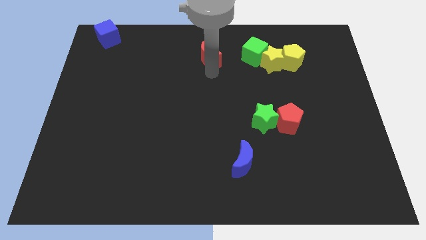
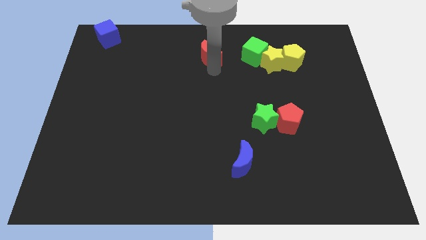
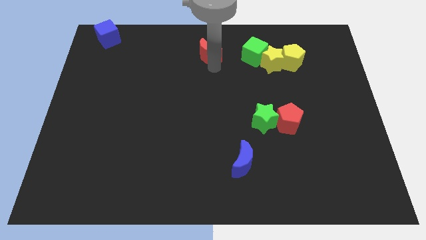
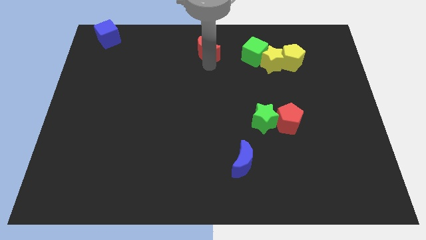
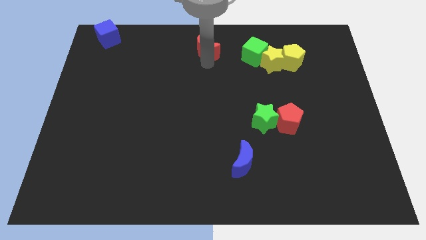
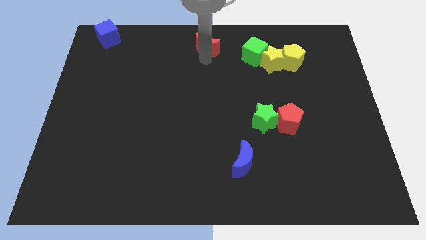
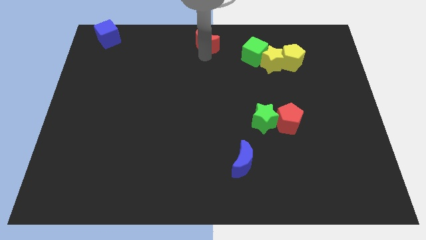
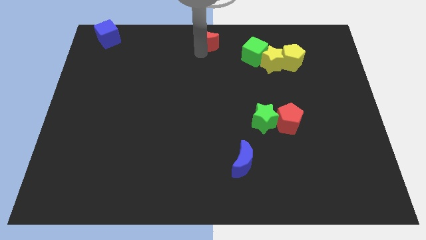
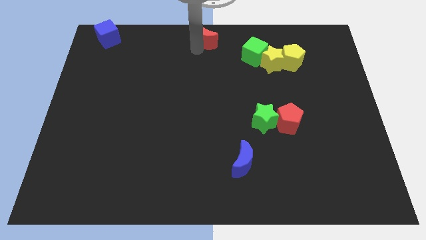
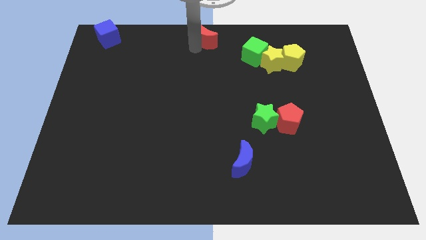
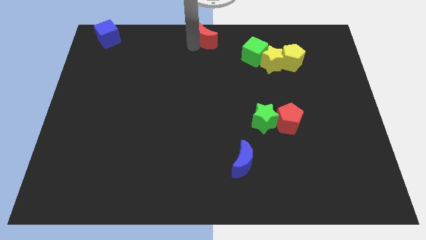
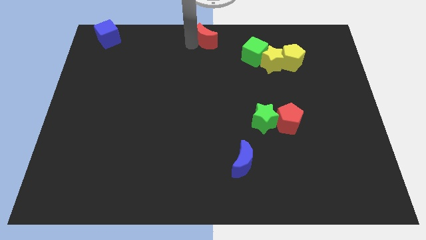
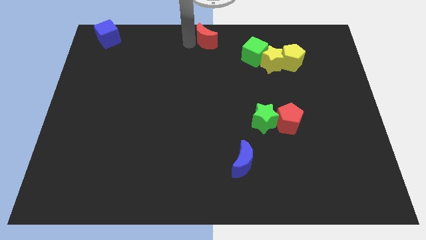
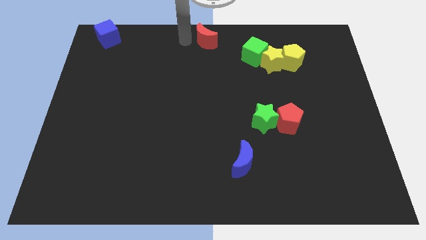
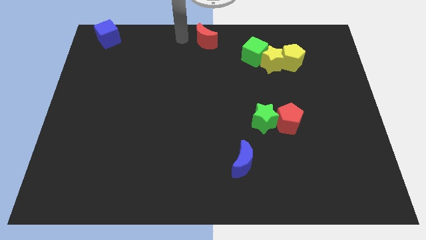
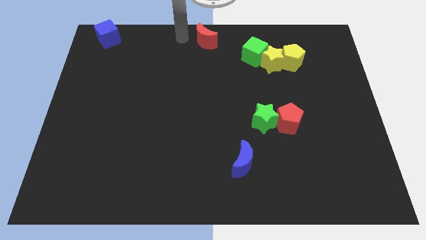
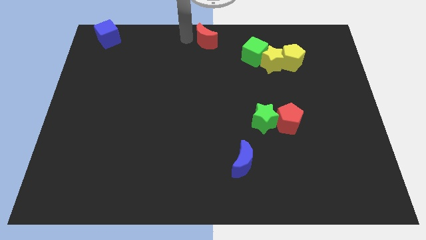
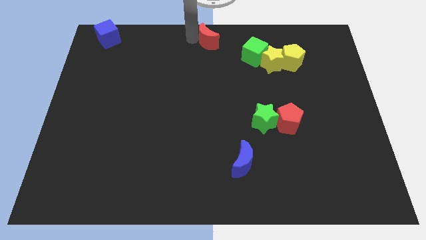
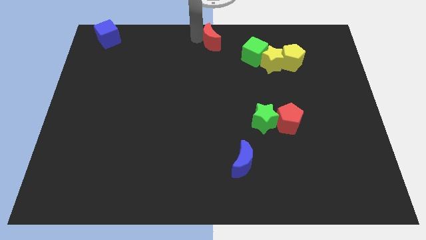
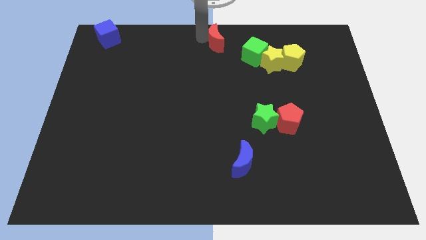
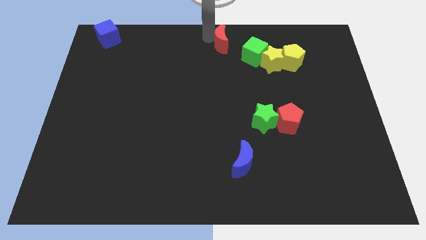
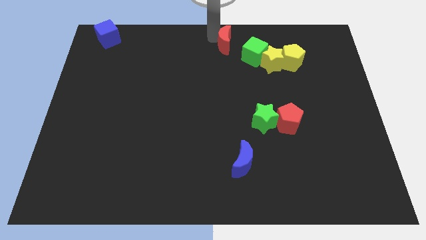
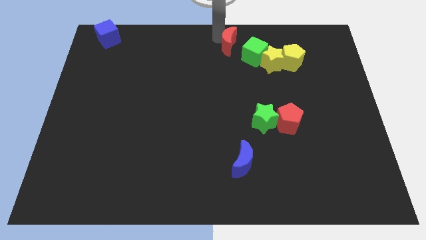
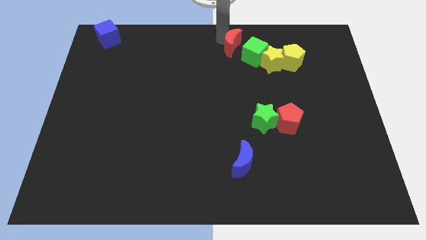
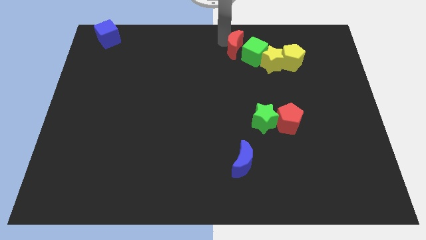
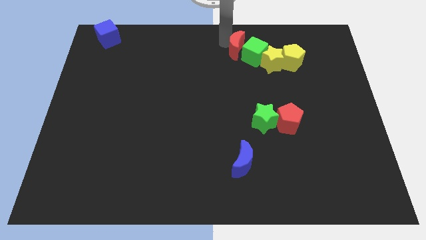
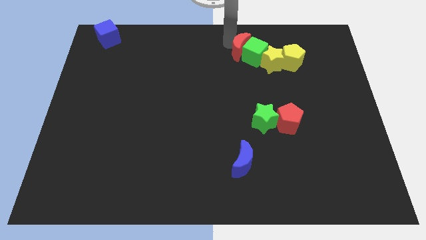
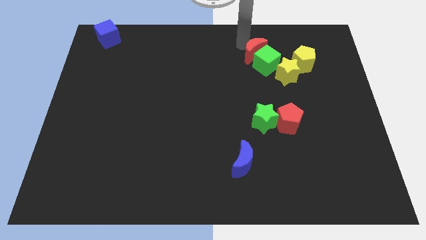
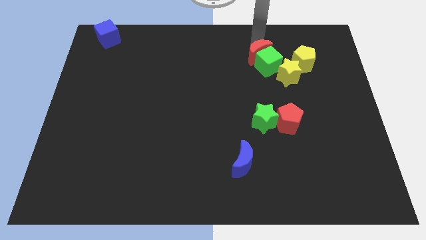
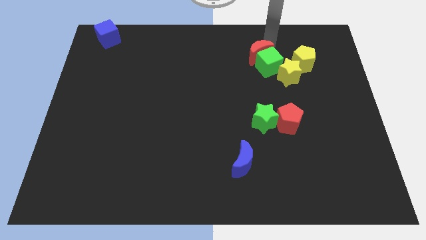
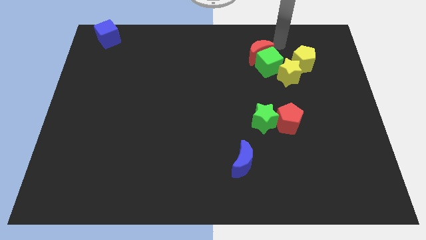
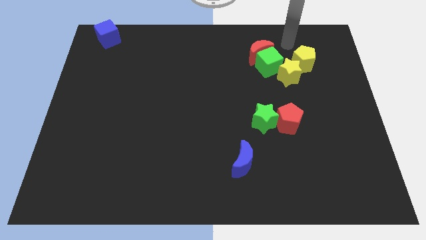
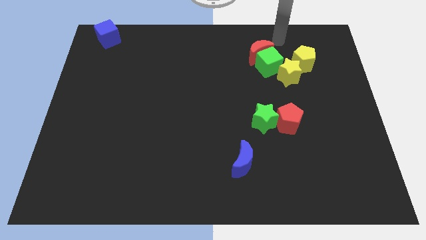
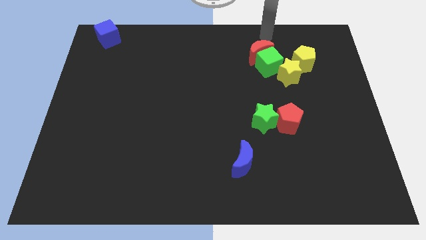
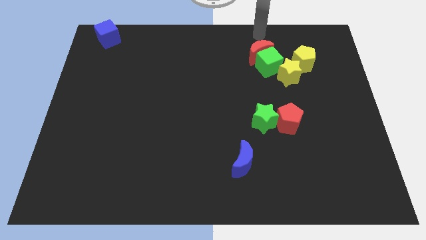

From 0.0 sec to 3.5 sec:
move the red moon into green cube

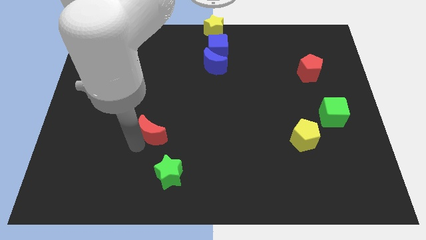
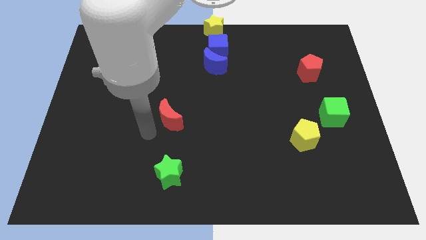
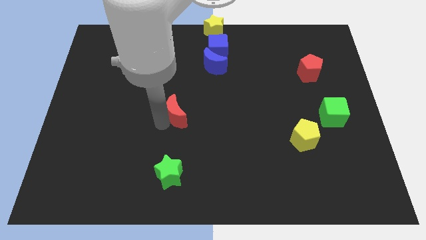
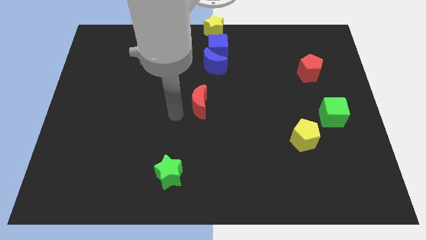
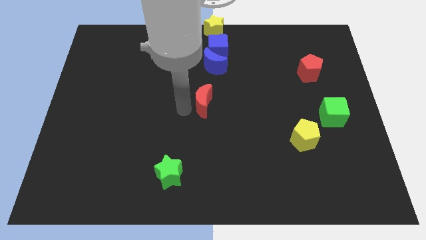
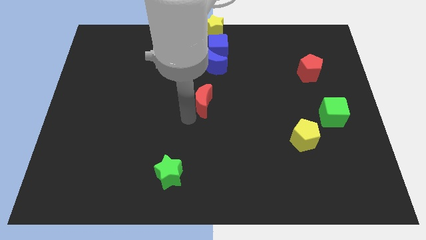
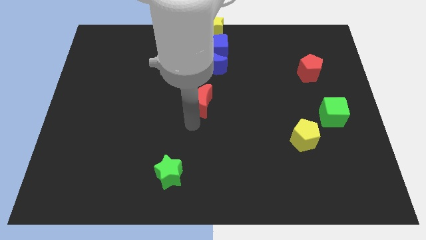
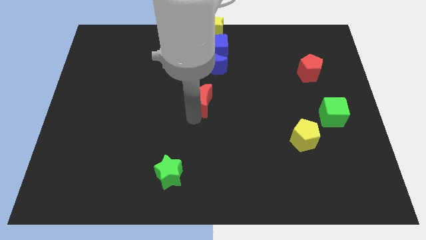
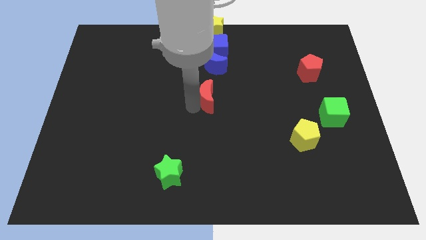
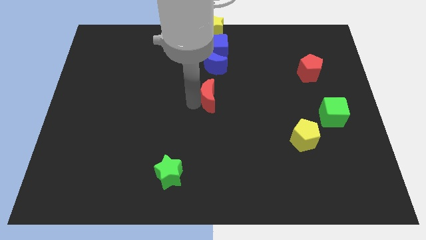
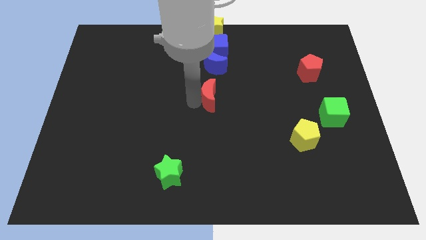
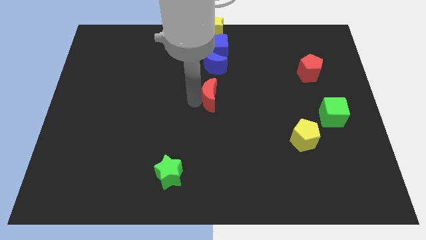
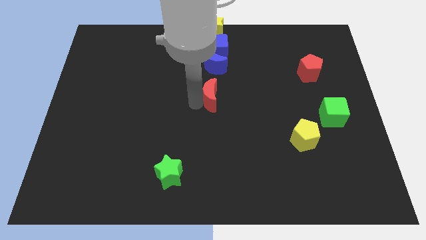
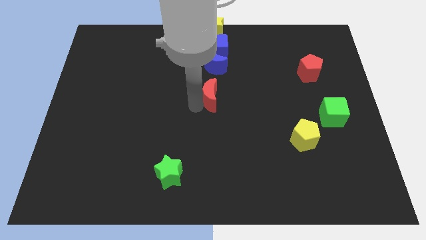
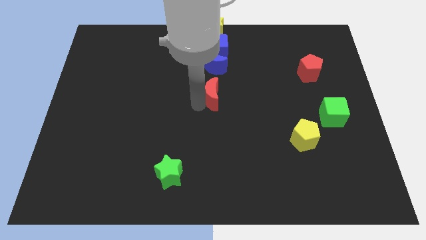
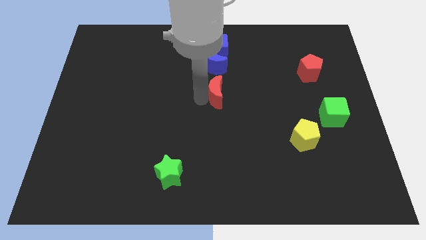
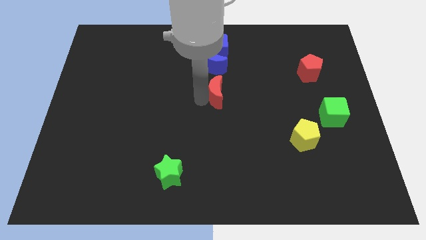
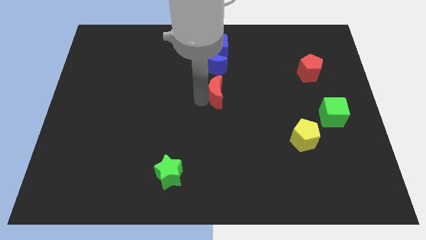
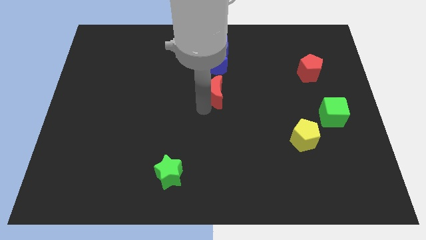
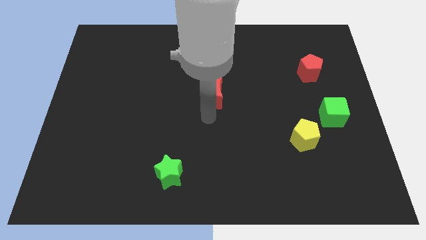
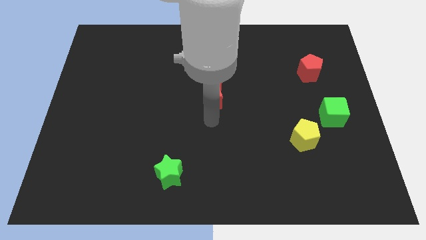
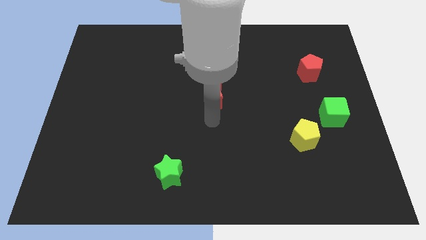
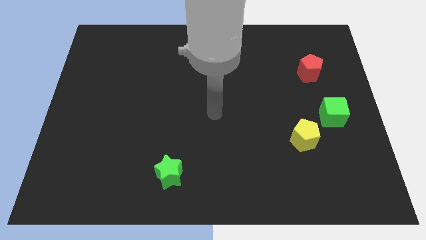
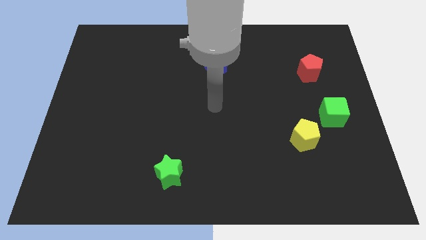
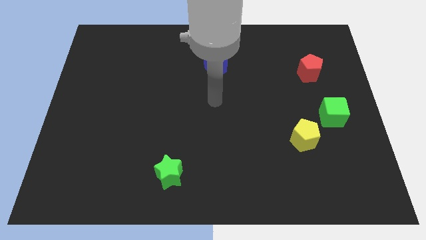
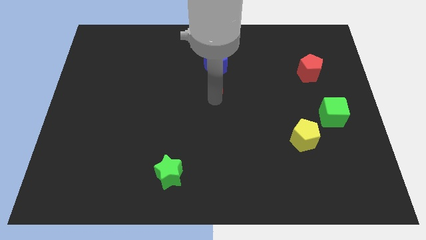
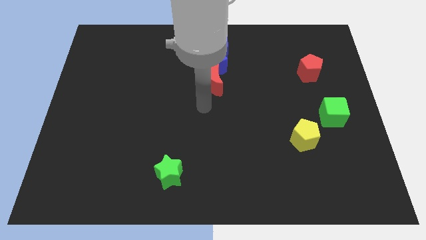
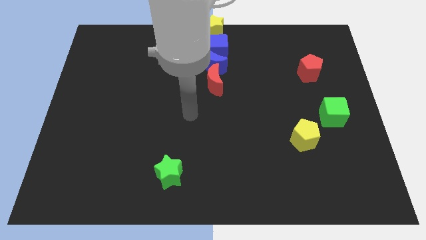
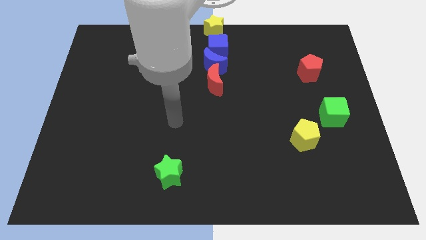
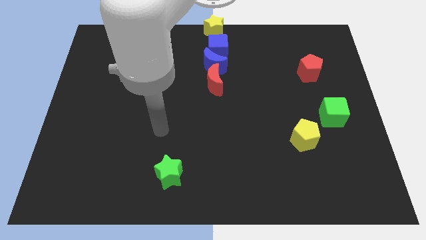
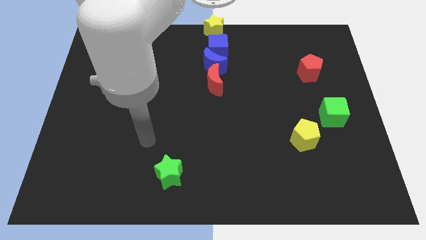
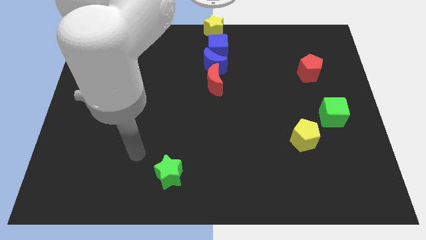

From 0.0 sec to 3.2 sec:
slide the red moon to the bottom of the blue moon

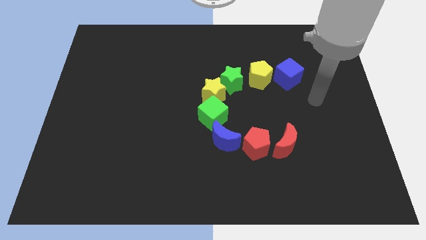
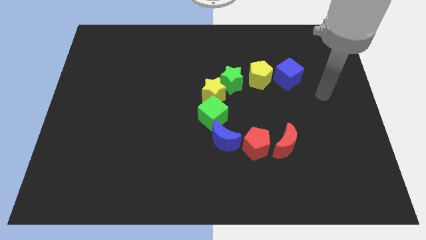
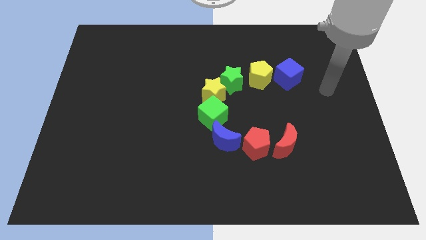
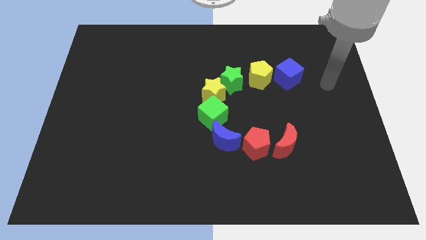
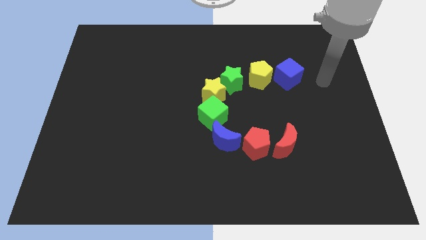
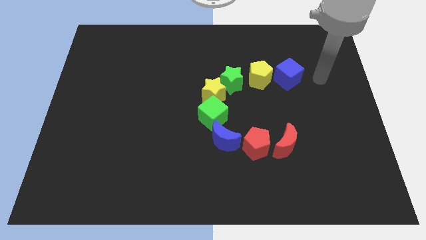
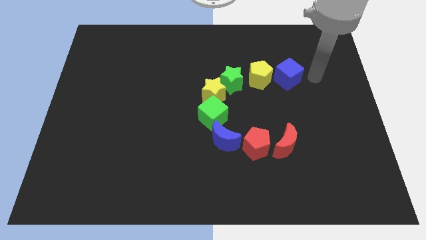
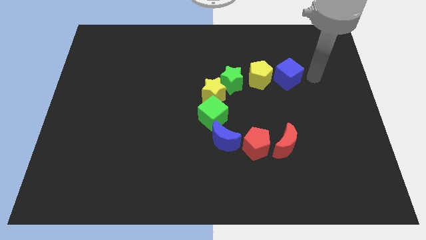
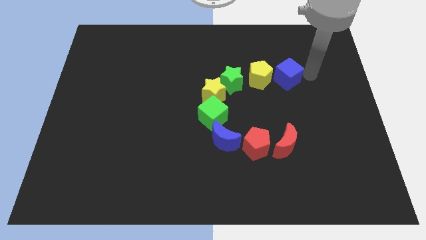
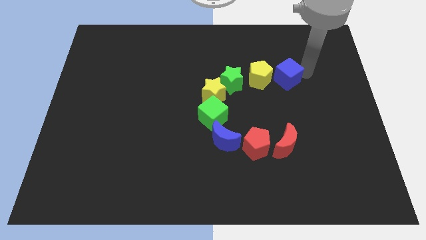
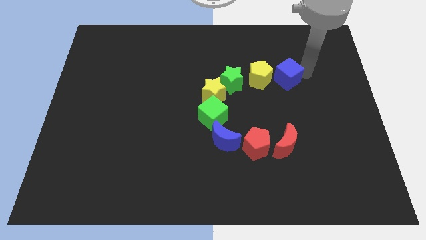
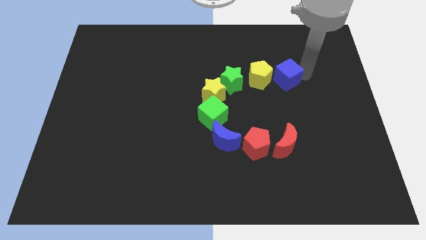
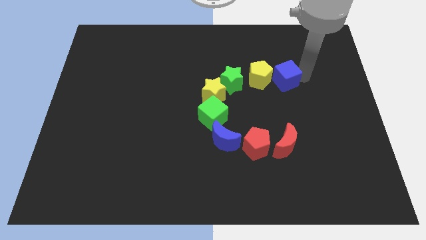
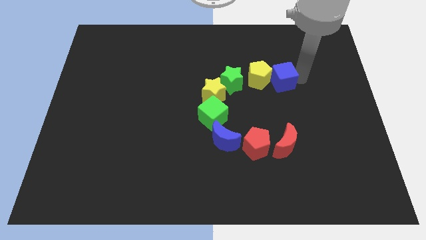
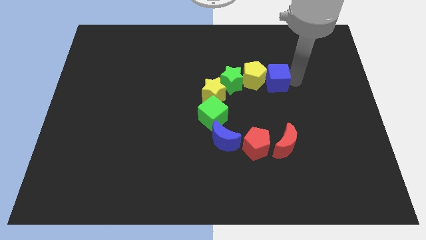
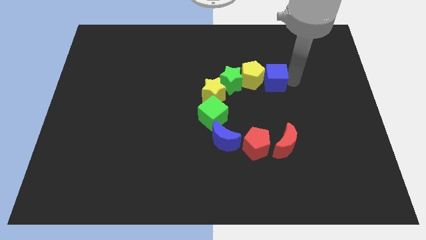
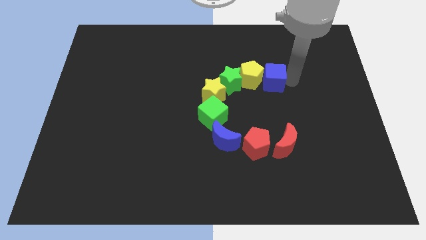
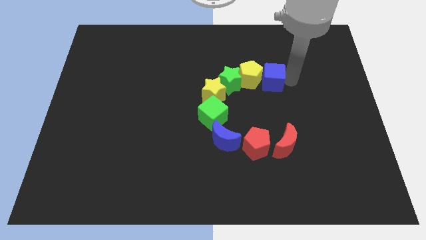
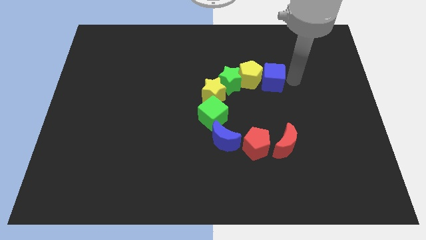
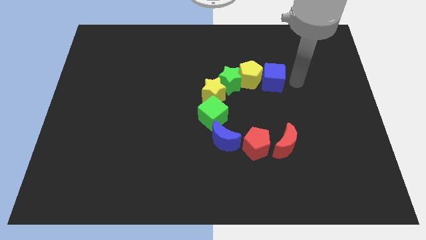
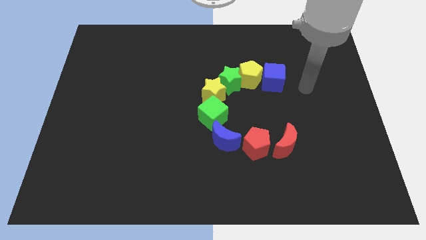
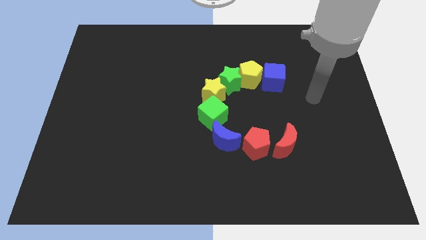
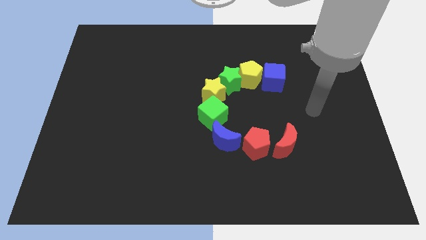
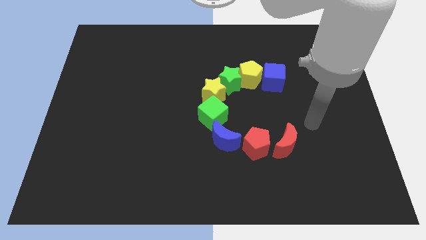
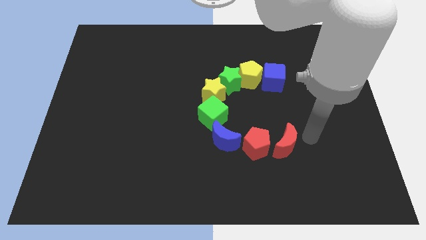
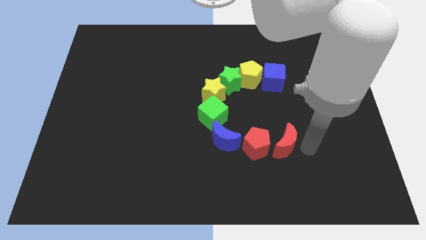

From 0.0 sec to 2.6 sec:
push the blue cube and yellow pentagon into the green star
